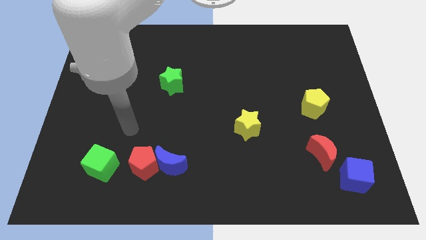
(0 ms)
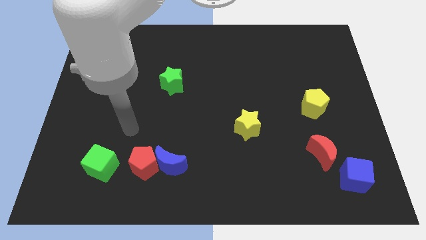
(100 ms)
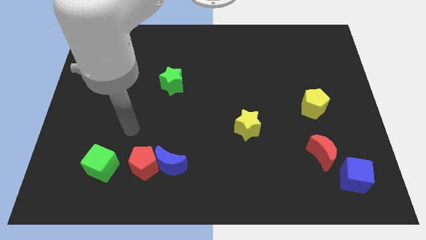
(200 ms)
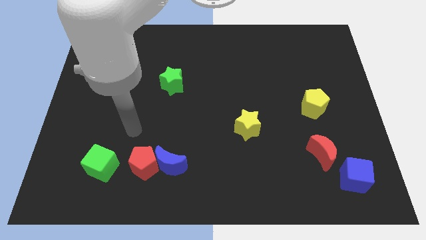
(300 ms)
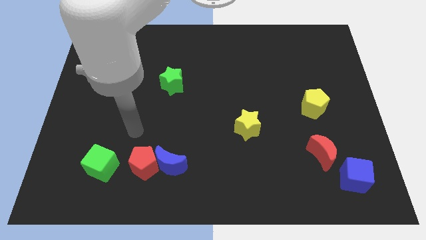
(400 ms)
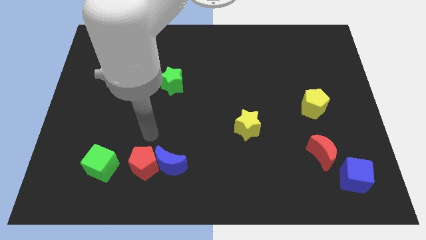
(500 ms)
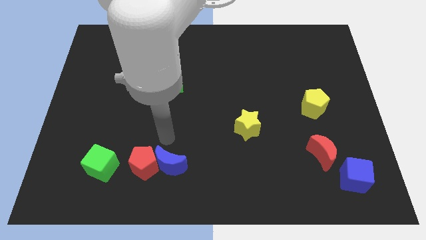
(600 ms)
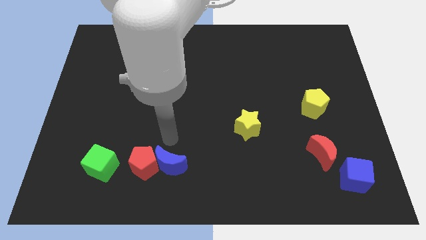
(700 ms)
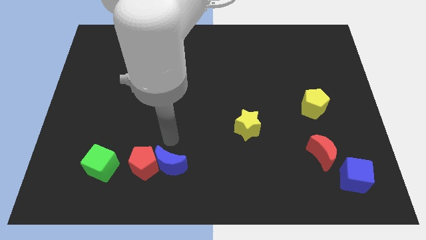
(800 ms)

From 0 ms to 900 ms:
place your arm above blue crescent

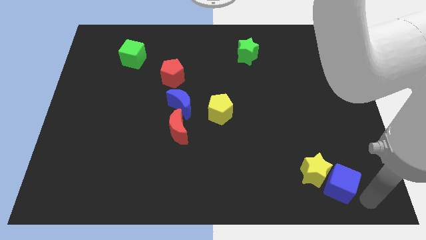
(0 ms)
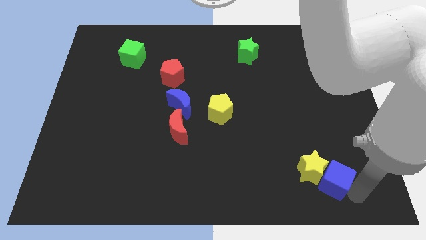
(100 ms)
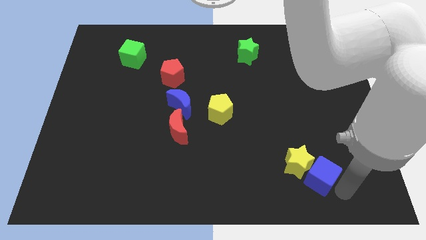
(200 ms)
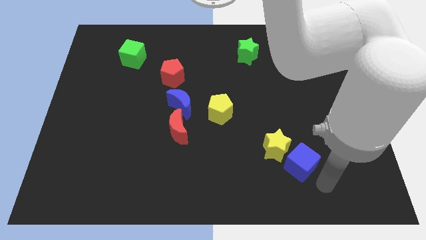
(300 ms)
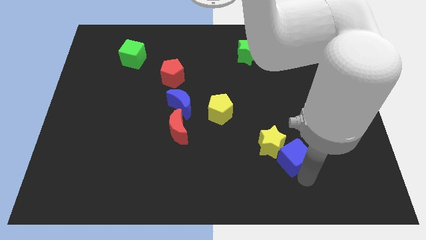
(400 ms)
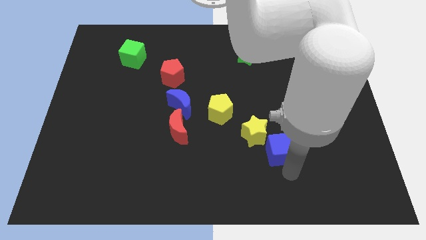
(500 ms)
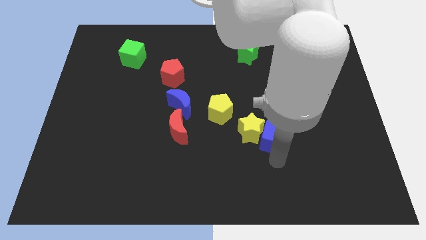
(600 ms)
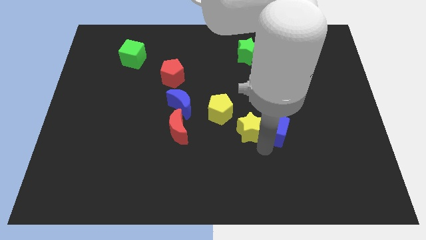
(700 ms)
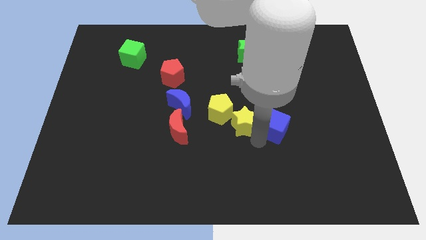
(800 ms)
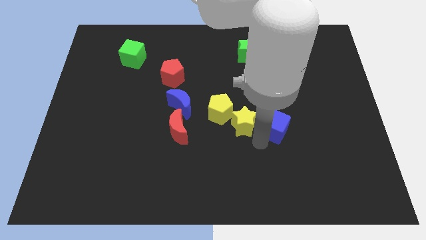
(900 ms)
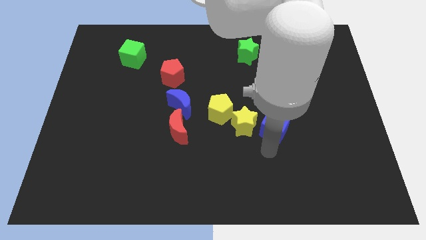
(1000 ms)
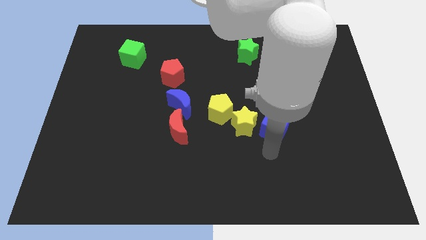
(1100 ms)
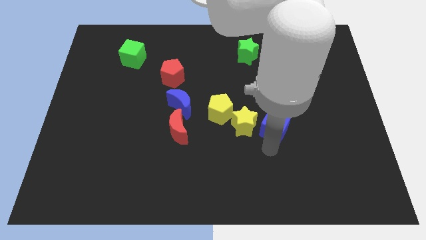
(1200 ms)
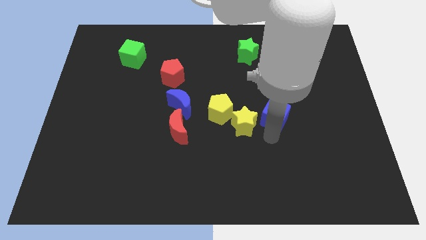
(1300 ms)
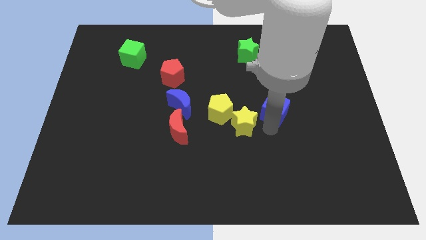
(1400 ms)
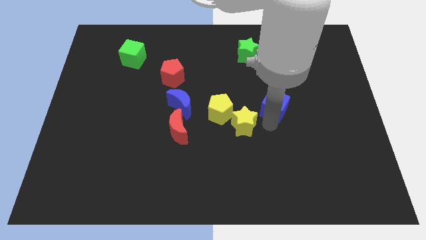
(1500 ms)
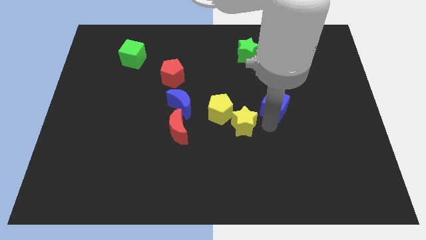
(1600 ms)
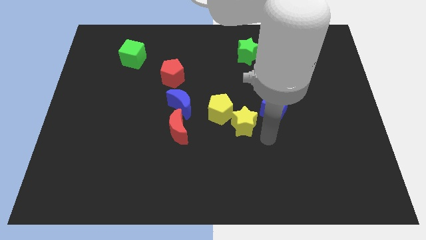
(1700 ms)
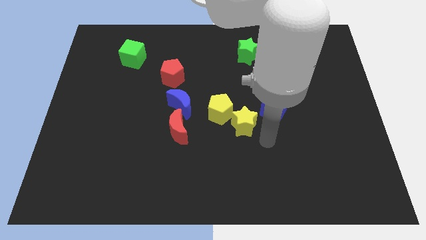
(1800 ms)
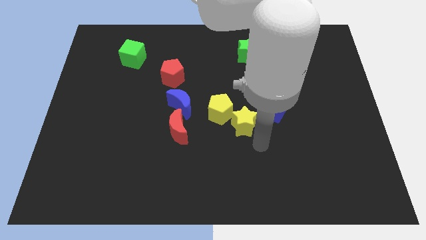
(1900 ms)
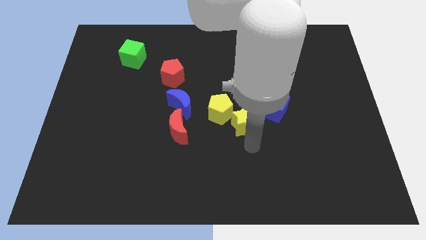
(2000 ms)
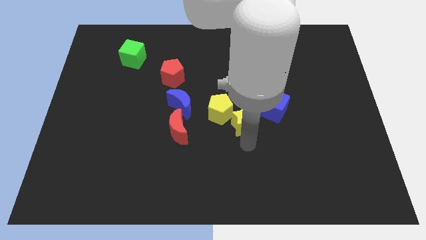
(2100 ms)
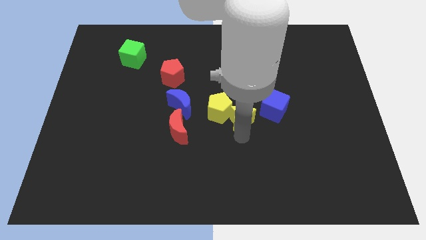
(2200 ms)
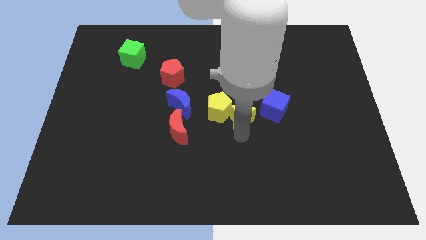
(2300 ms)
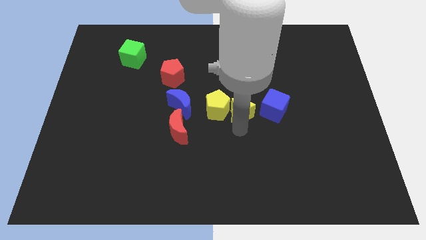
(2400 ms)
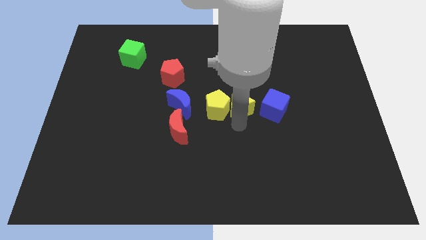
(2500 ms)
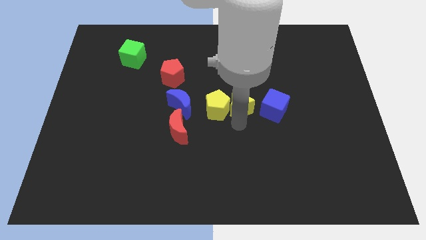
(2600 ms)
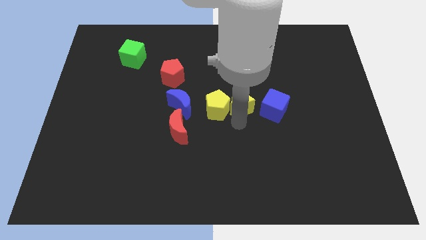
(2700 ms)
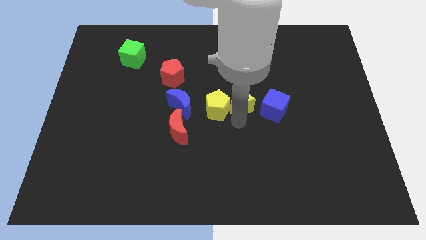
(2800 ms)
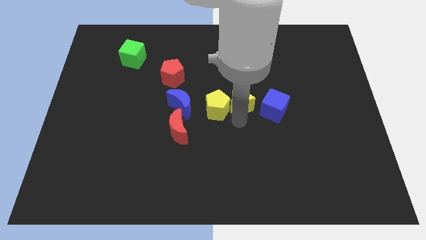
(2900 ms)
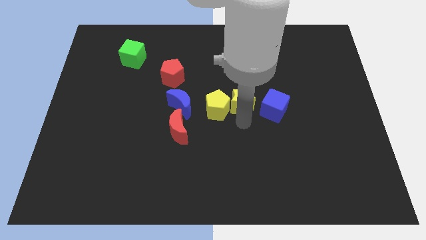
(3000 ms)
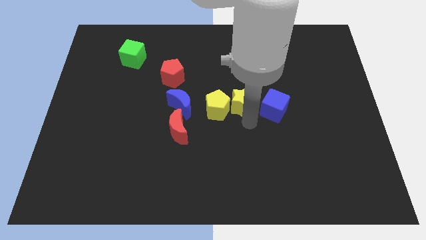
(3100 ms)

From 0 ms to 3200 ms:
push the yellow star along with blue cube towards the right side of the yellow pentagon

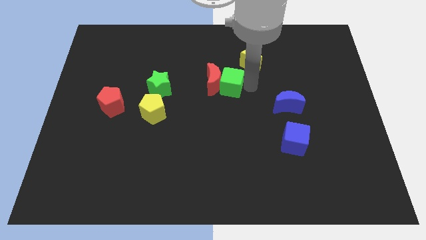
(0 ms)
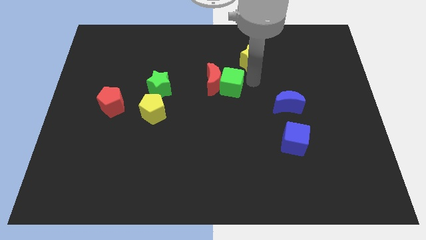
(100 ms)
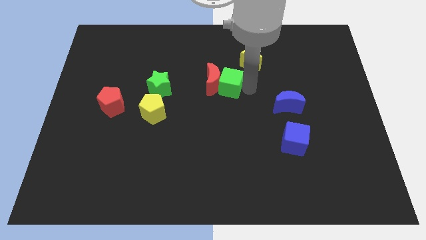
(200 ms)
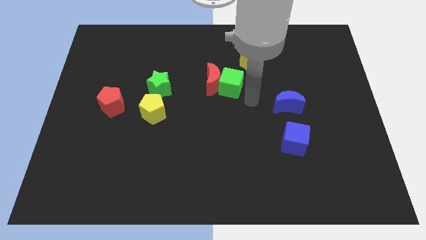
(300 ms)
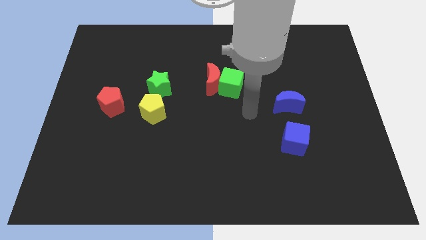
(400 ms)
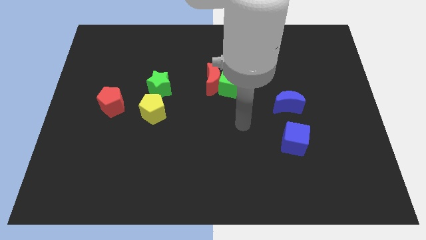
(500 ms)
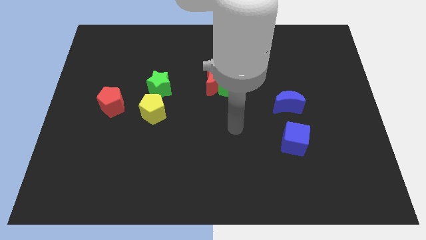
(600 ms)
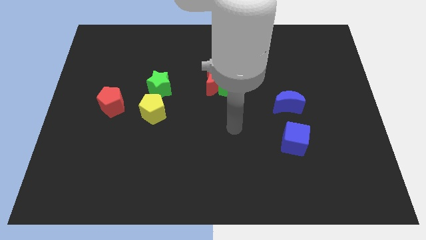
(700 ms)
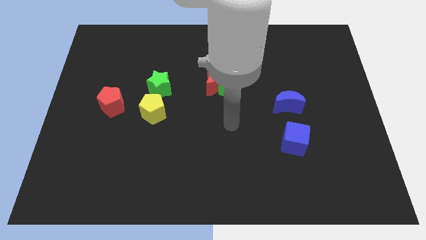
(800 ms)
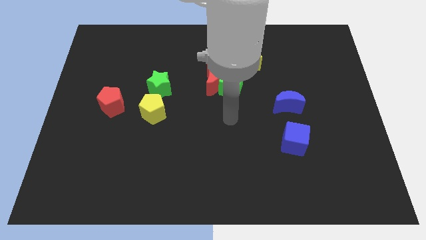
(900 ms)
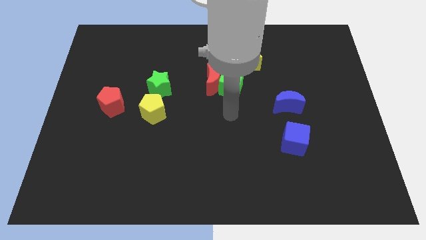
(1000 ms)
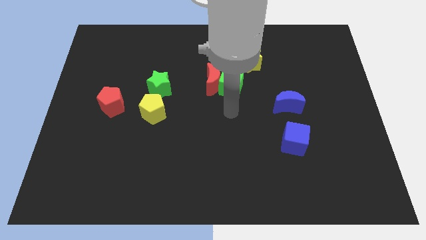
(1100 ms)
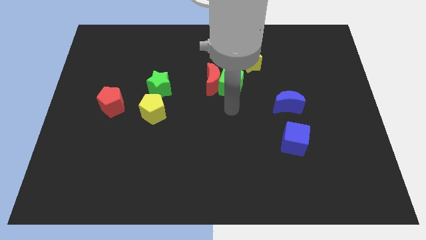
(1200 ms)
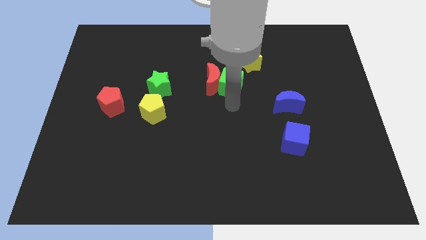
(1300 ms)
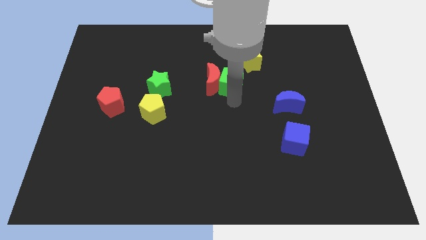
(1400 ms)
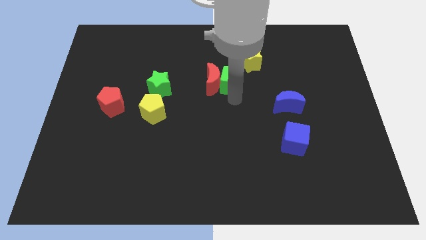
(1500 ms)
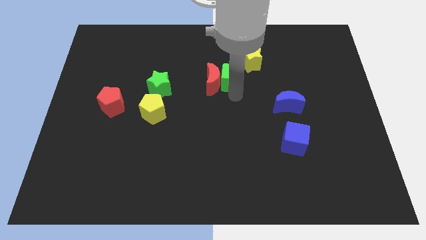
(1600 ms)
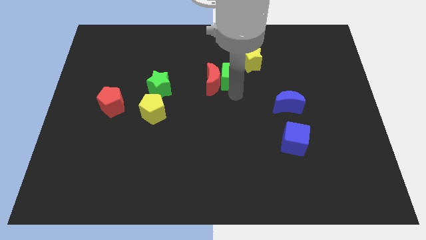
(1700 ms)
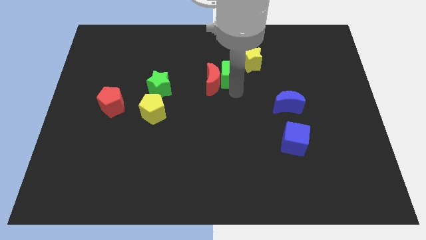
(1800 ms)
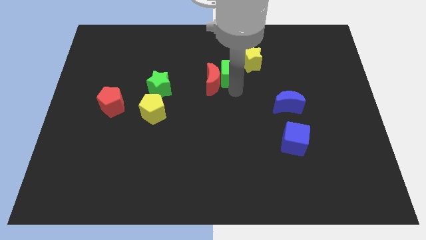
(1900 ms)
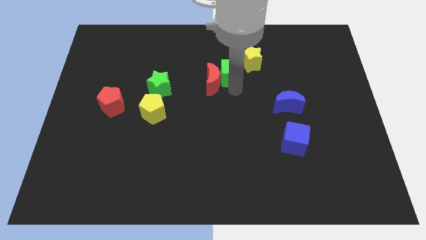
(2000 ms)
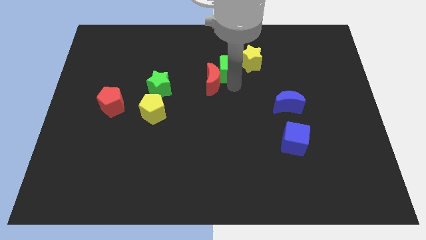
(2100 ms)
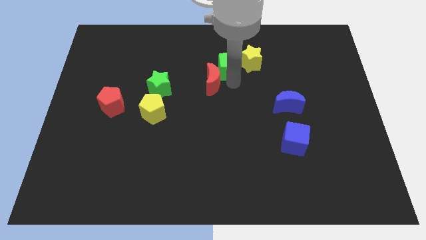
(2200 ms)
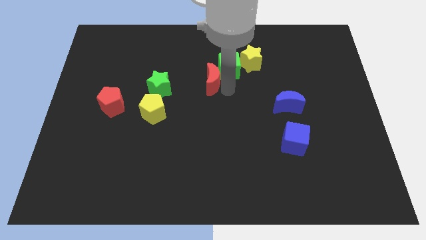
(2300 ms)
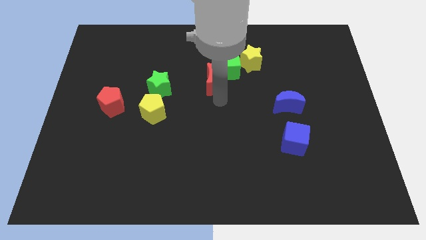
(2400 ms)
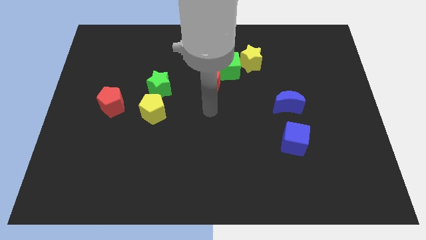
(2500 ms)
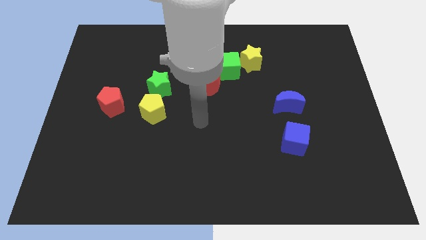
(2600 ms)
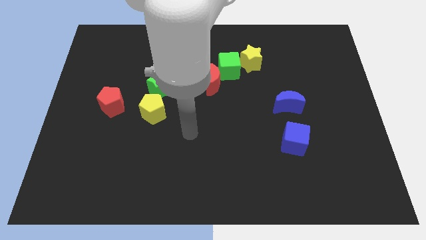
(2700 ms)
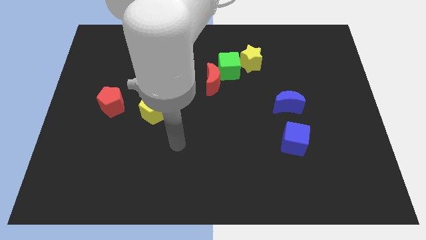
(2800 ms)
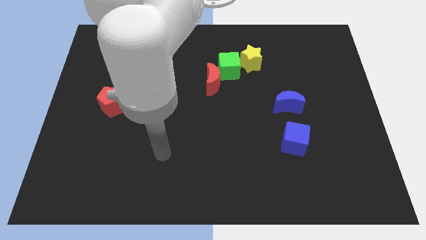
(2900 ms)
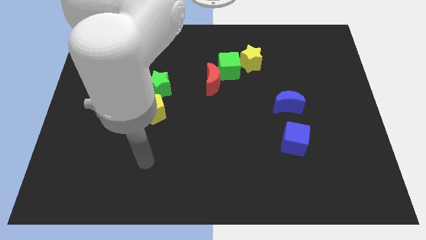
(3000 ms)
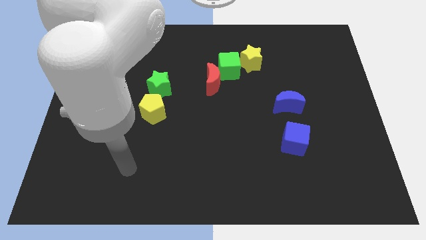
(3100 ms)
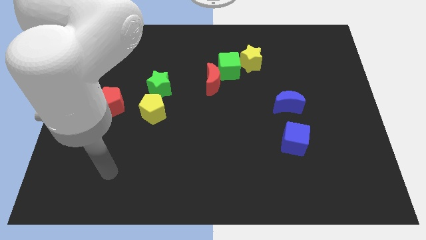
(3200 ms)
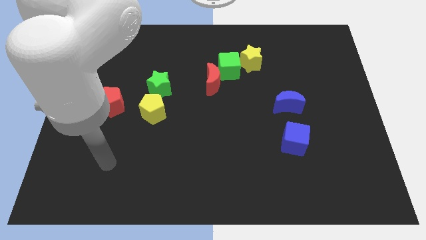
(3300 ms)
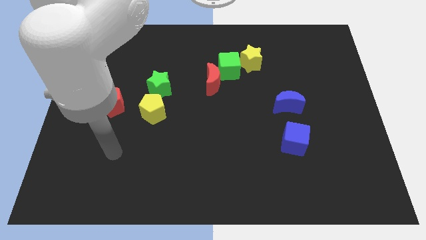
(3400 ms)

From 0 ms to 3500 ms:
move the green cube in between the yellow pentagon and the red crescent

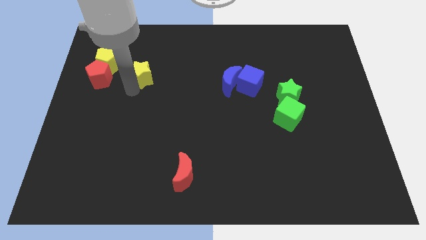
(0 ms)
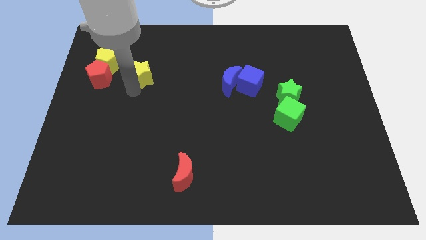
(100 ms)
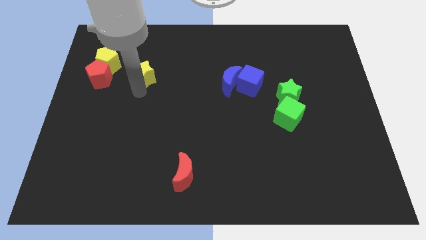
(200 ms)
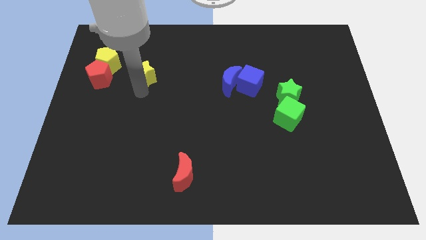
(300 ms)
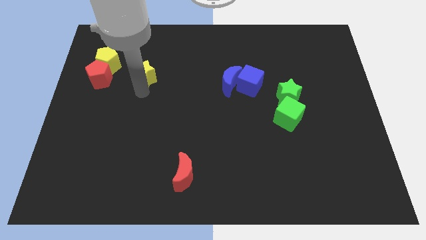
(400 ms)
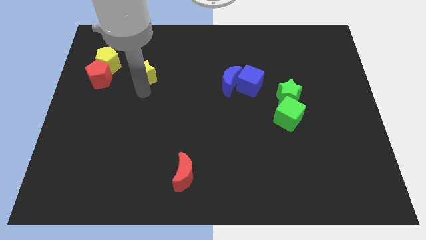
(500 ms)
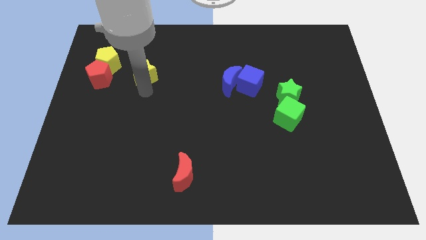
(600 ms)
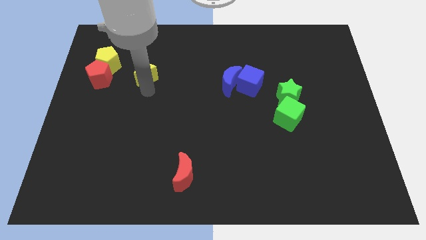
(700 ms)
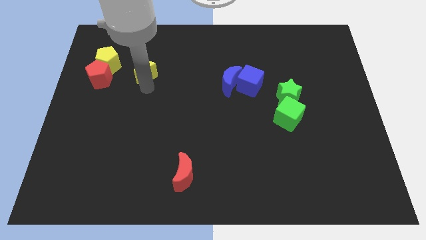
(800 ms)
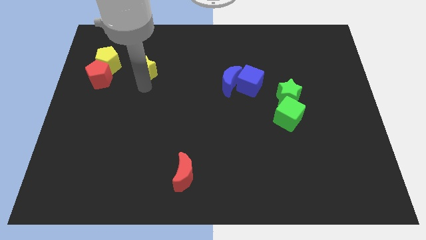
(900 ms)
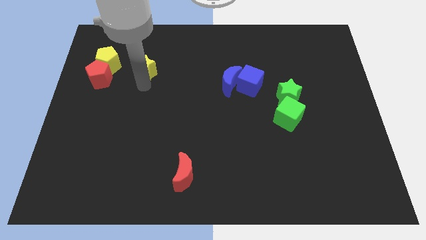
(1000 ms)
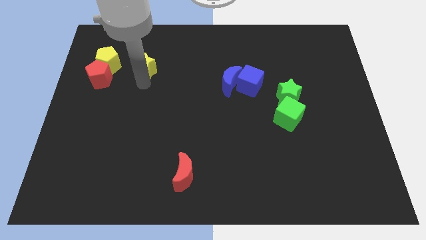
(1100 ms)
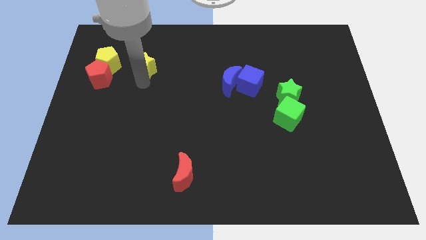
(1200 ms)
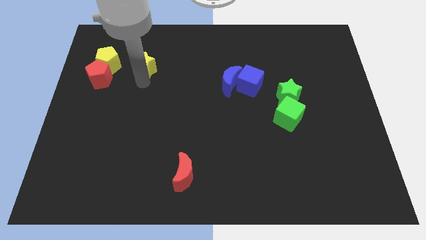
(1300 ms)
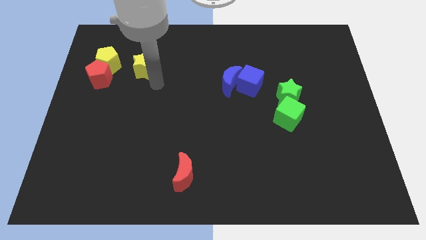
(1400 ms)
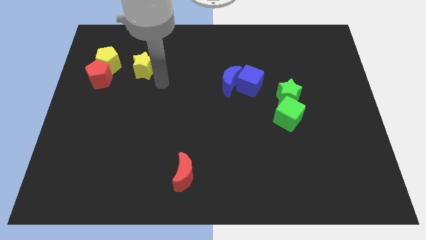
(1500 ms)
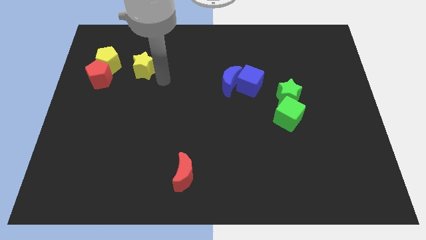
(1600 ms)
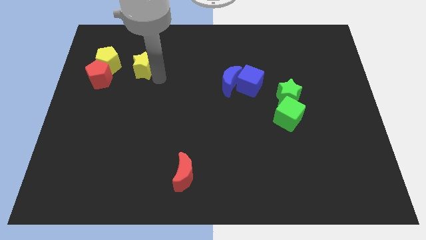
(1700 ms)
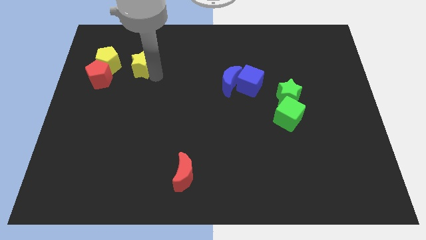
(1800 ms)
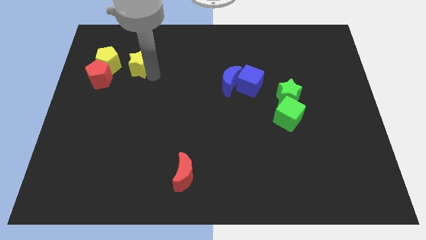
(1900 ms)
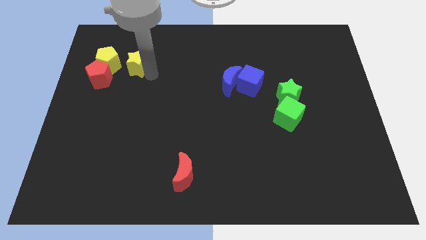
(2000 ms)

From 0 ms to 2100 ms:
place the yellow star to the right of the yellow pentagon
